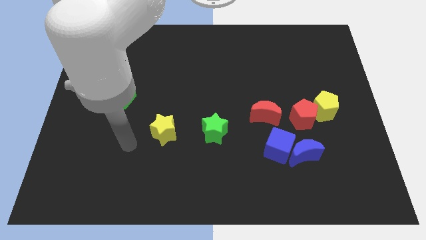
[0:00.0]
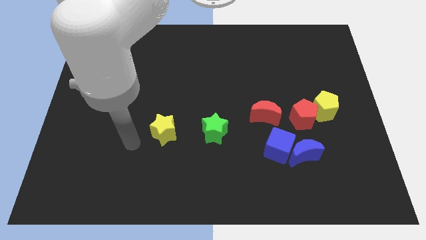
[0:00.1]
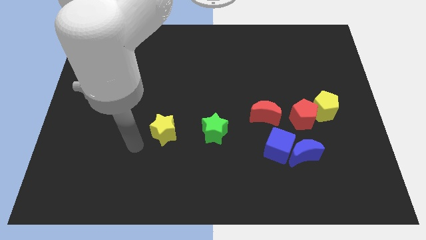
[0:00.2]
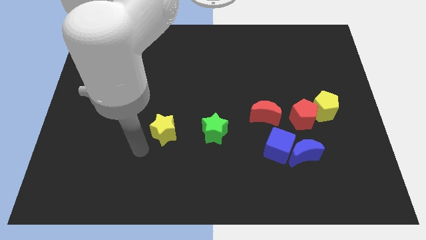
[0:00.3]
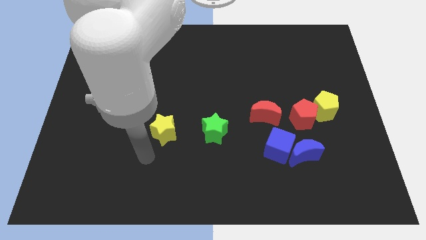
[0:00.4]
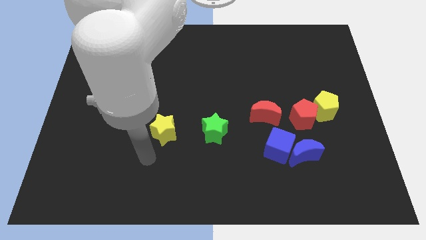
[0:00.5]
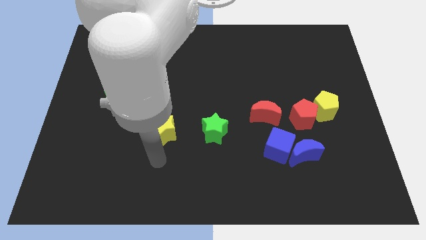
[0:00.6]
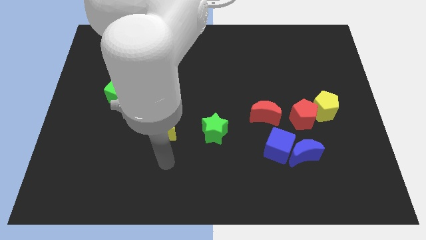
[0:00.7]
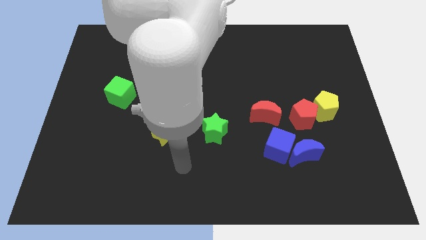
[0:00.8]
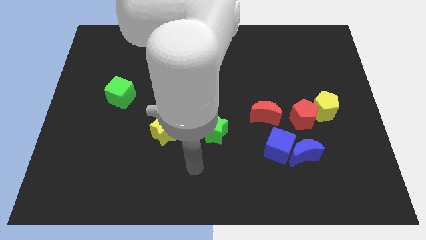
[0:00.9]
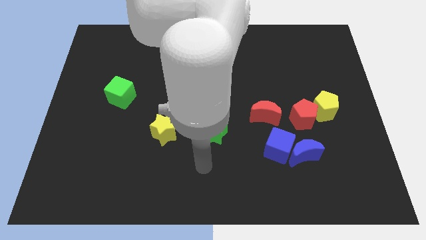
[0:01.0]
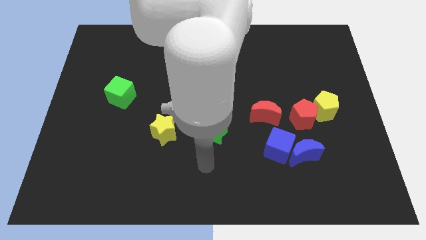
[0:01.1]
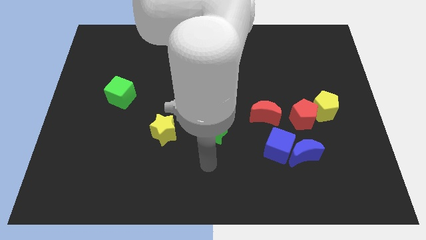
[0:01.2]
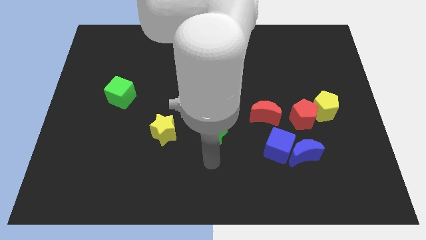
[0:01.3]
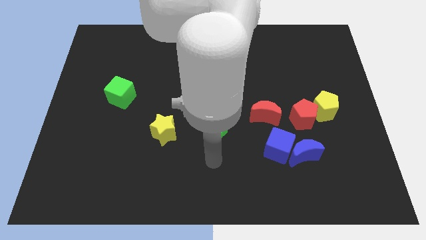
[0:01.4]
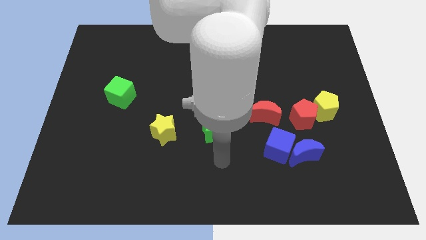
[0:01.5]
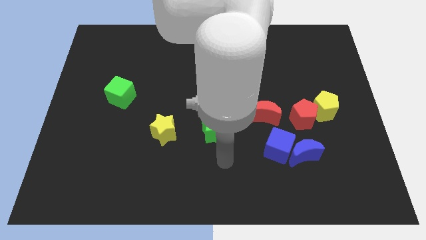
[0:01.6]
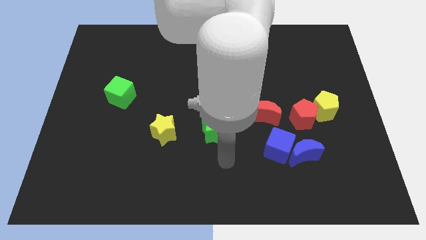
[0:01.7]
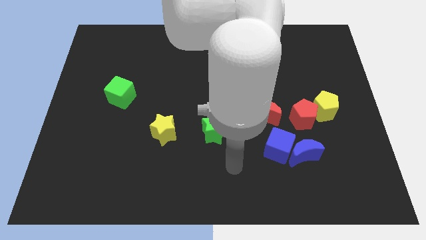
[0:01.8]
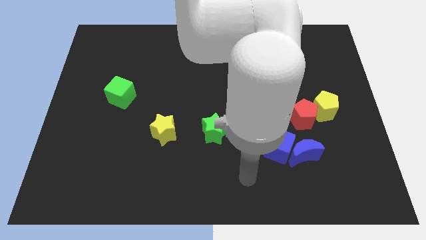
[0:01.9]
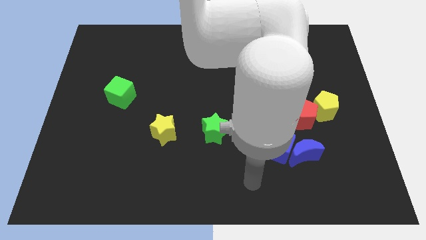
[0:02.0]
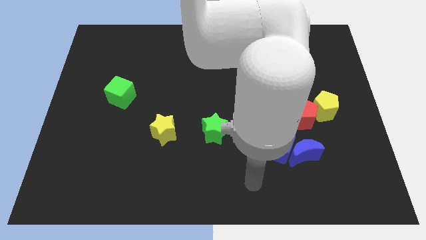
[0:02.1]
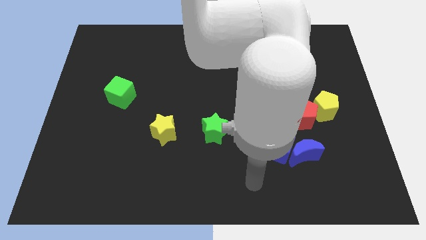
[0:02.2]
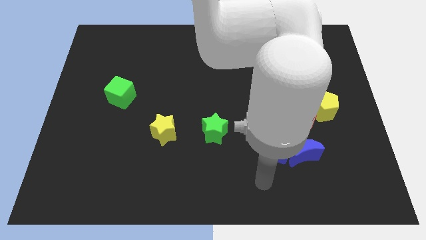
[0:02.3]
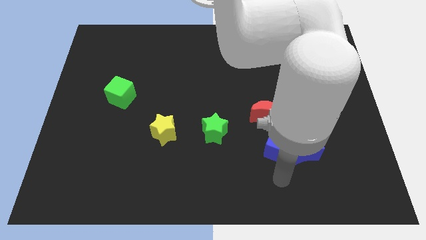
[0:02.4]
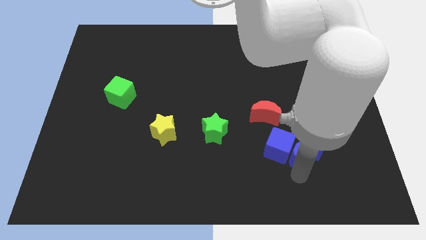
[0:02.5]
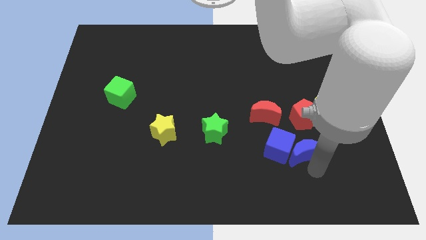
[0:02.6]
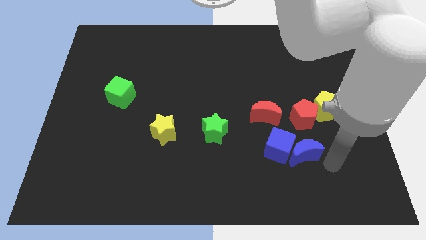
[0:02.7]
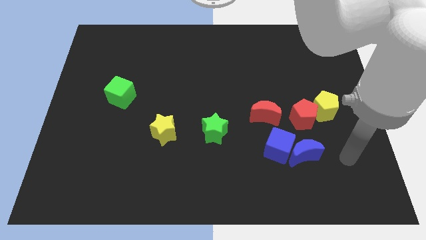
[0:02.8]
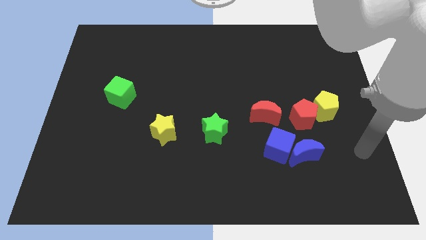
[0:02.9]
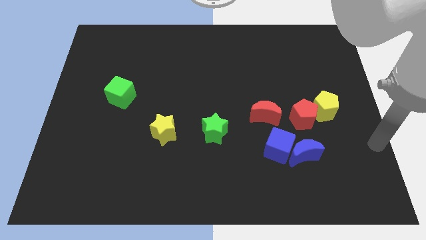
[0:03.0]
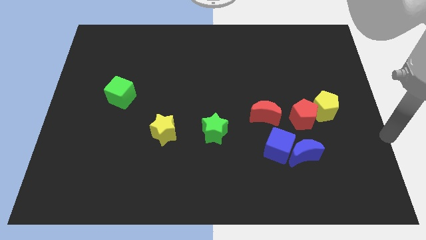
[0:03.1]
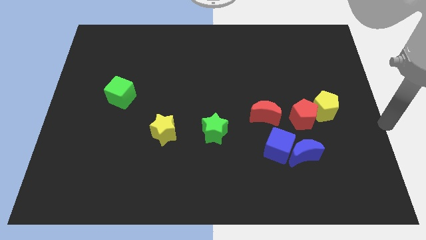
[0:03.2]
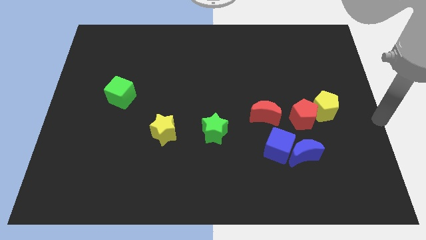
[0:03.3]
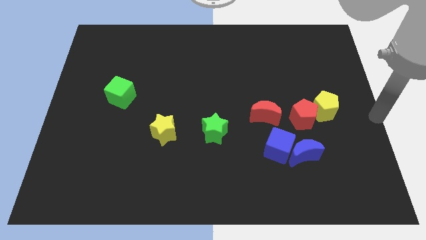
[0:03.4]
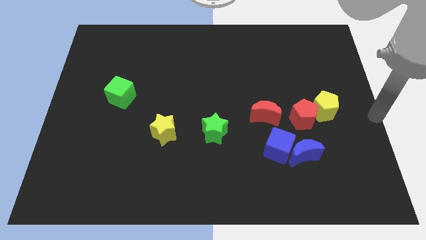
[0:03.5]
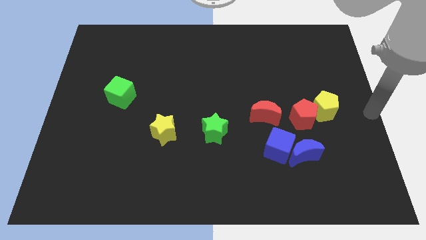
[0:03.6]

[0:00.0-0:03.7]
point the arm to the right center of the board

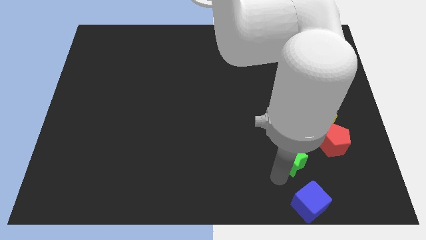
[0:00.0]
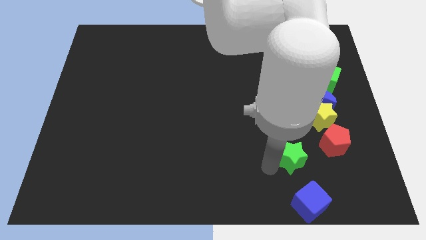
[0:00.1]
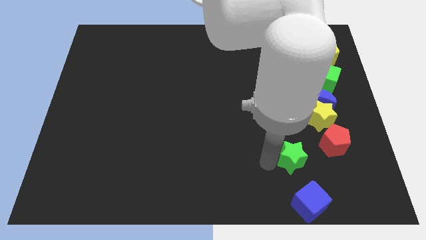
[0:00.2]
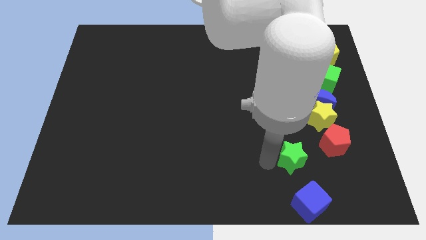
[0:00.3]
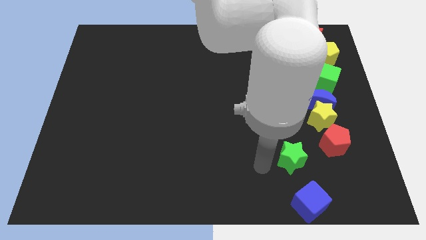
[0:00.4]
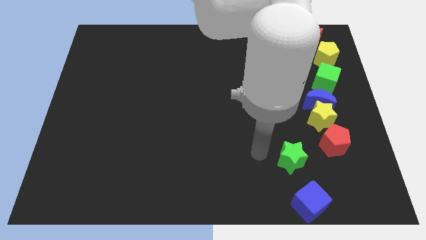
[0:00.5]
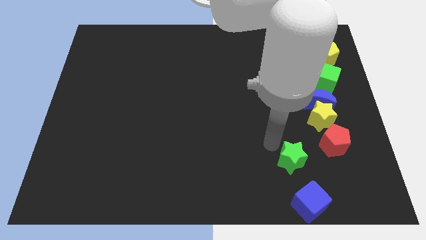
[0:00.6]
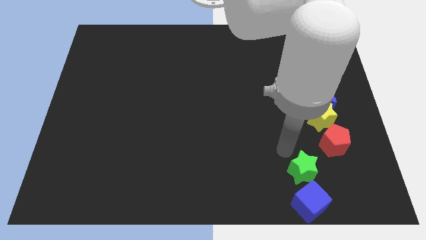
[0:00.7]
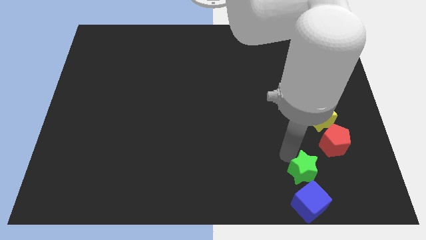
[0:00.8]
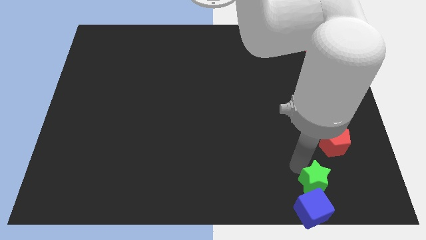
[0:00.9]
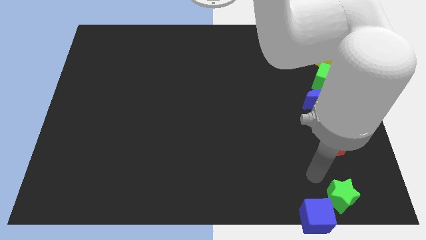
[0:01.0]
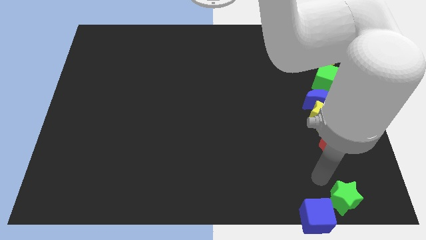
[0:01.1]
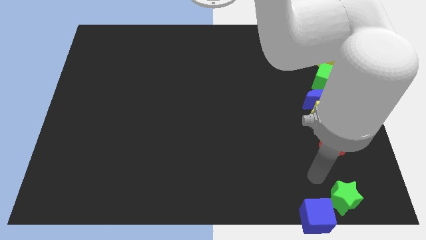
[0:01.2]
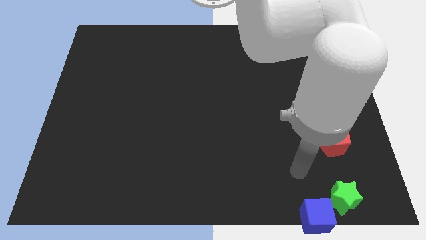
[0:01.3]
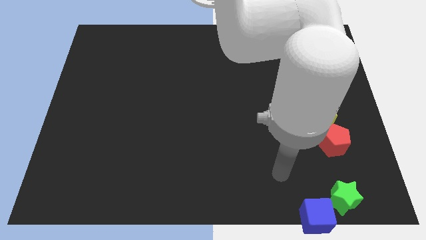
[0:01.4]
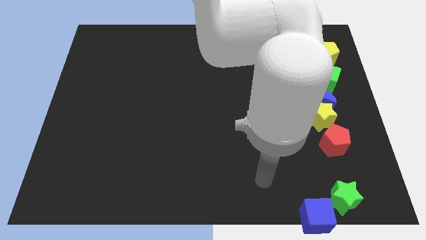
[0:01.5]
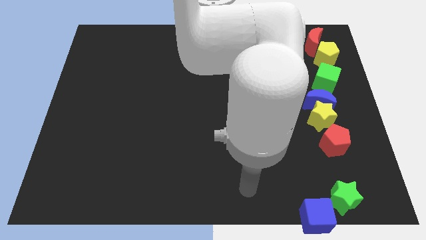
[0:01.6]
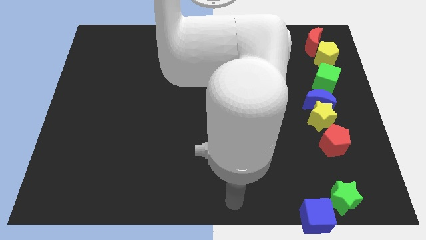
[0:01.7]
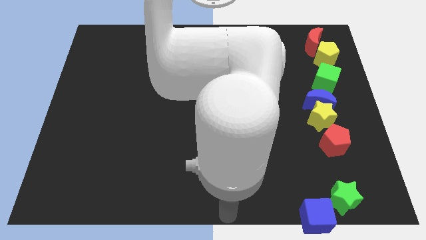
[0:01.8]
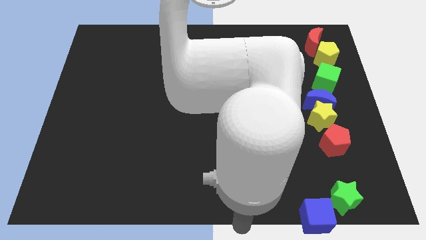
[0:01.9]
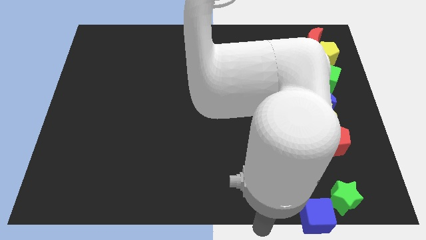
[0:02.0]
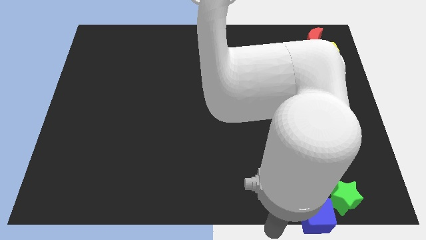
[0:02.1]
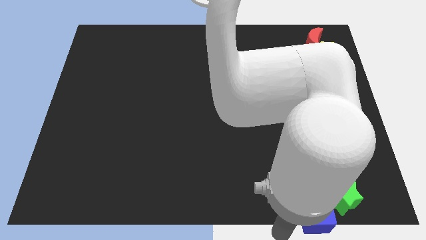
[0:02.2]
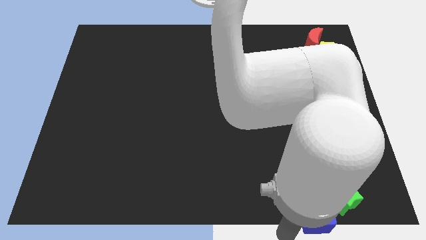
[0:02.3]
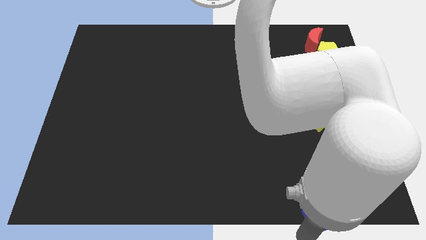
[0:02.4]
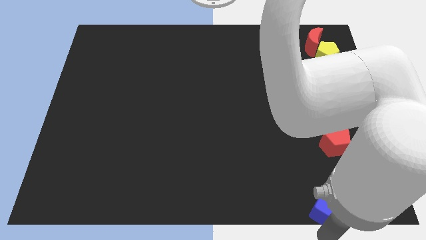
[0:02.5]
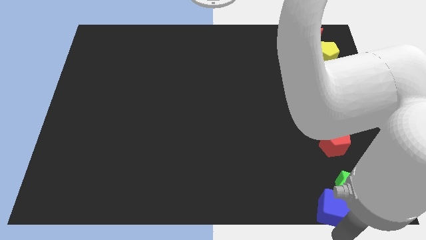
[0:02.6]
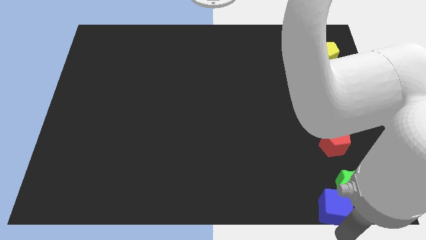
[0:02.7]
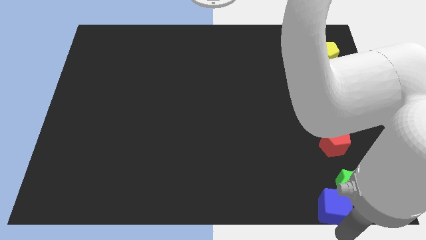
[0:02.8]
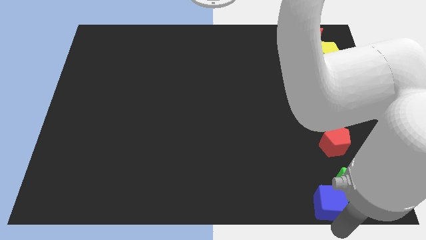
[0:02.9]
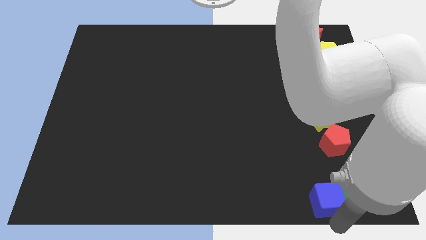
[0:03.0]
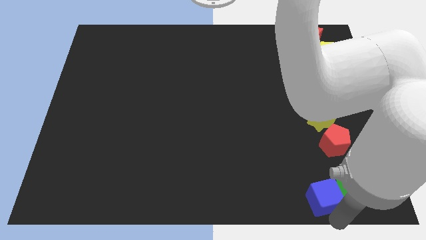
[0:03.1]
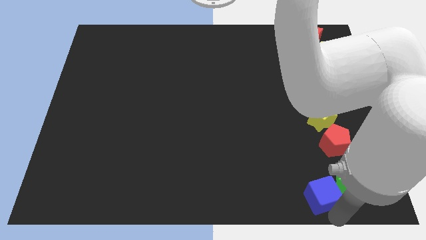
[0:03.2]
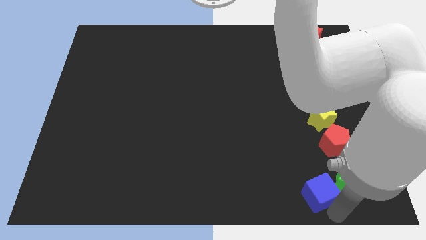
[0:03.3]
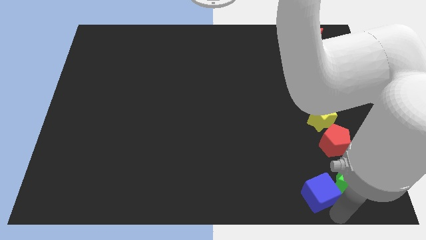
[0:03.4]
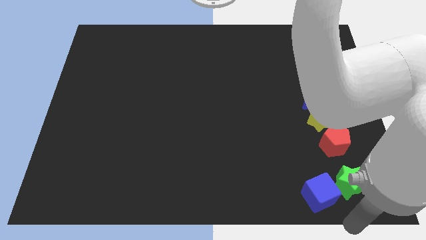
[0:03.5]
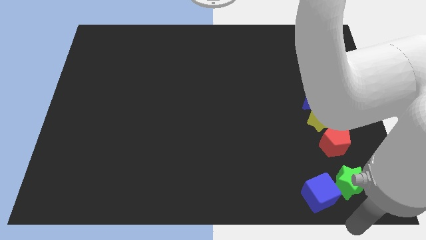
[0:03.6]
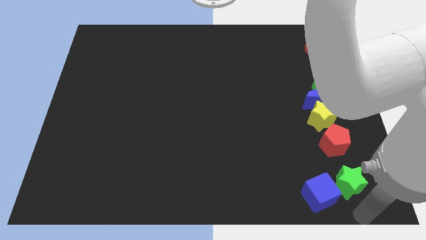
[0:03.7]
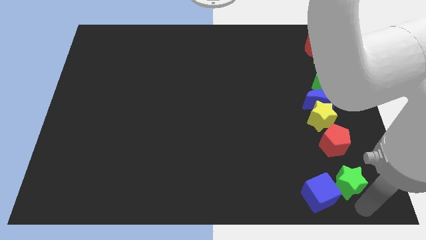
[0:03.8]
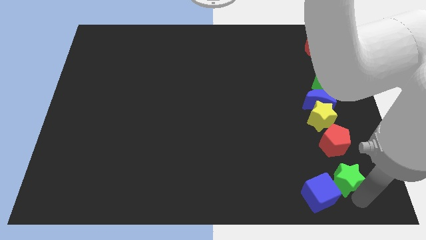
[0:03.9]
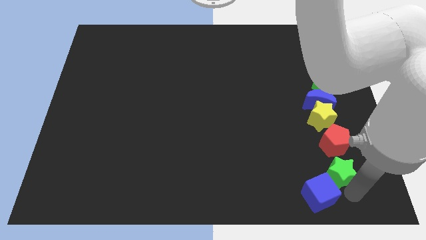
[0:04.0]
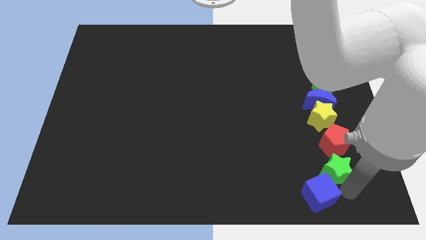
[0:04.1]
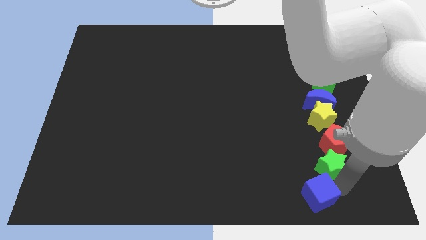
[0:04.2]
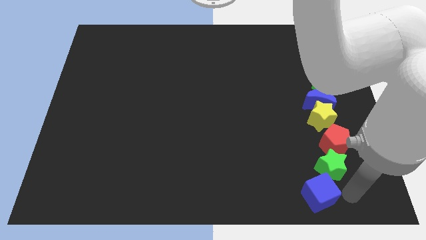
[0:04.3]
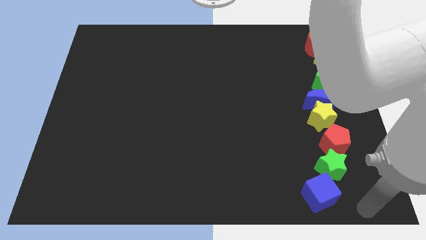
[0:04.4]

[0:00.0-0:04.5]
place the green star in between the red pentagon and the blue cube

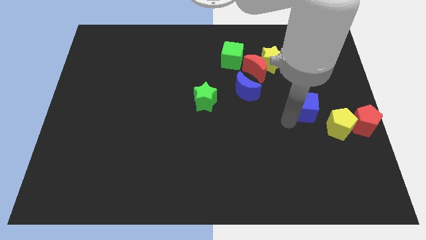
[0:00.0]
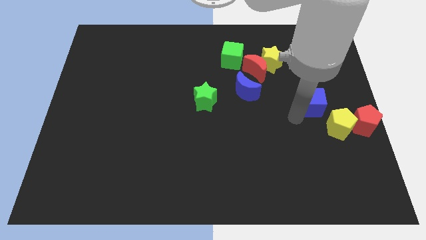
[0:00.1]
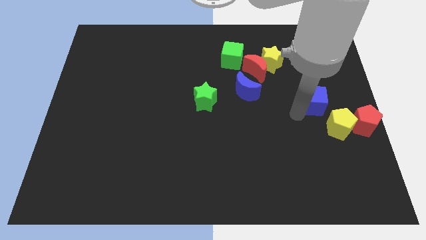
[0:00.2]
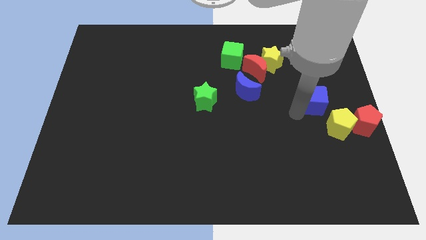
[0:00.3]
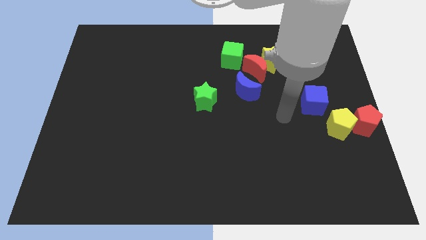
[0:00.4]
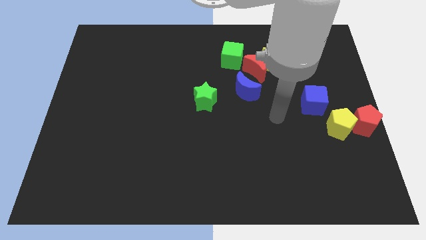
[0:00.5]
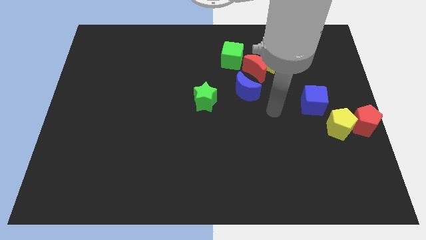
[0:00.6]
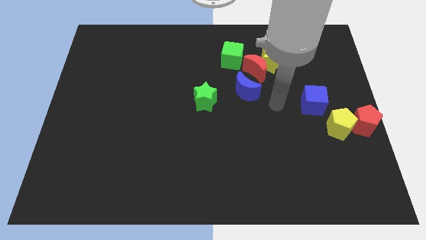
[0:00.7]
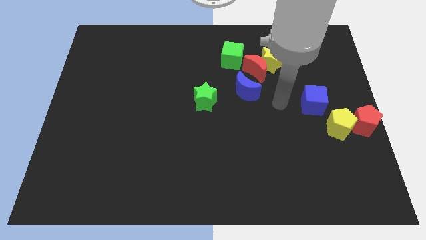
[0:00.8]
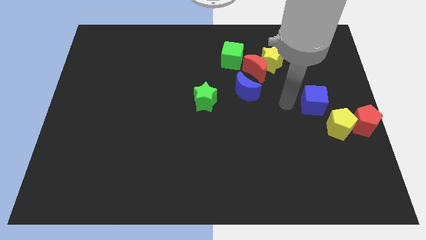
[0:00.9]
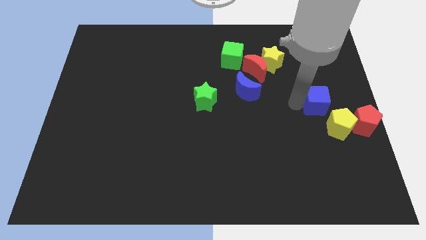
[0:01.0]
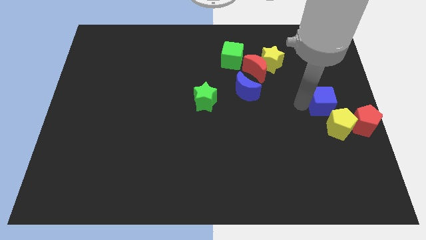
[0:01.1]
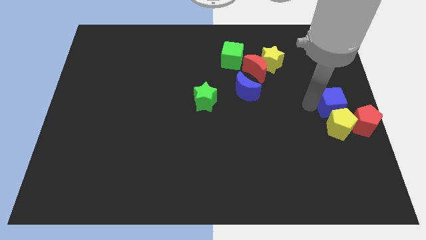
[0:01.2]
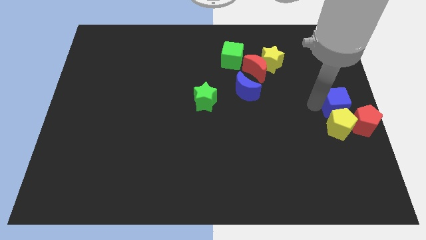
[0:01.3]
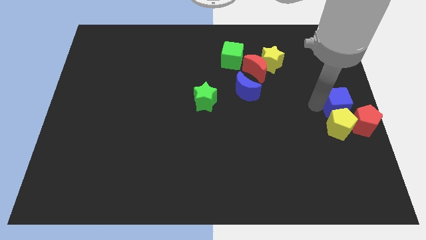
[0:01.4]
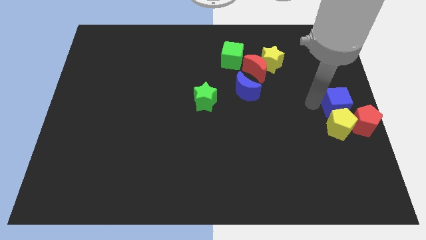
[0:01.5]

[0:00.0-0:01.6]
move blue cube slightly to the top of yellow pentagon
